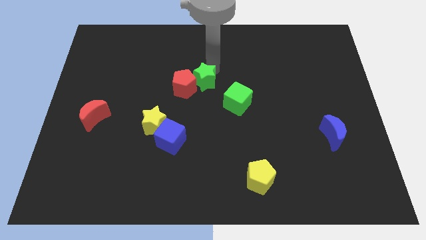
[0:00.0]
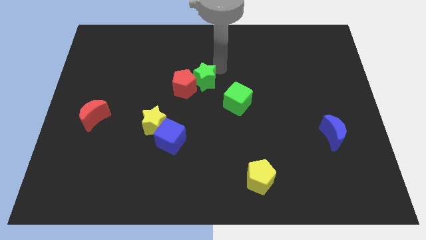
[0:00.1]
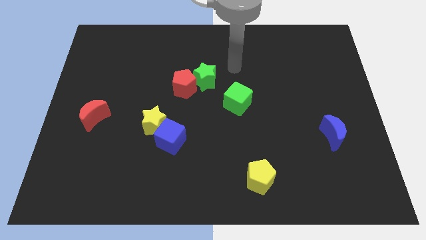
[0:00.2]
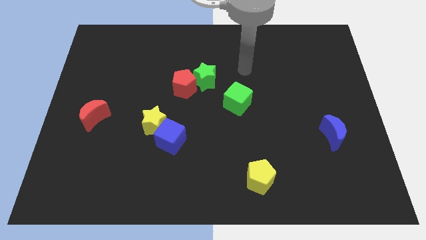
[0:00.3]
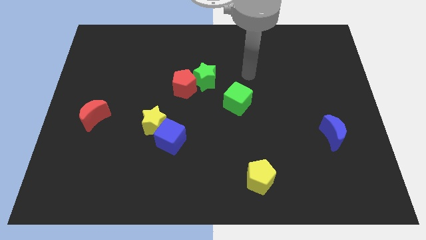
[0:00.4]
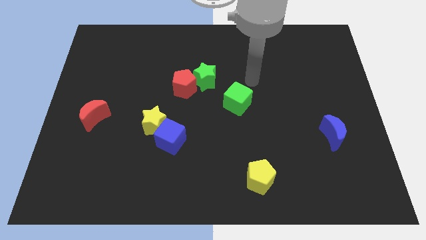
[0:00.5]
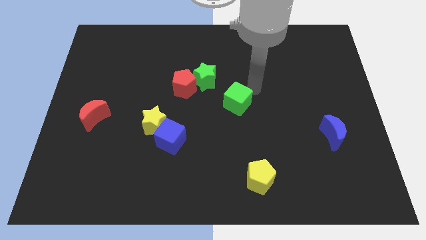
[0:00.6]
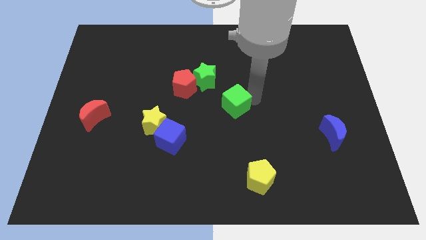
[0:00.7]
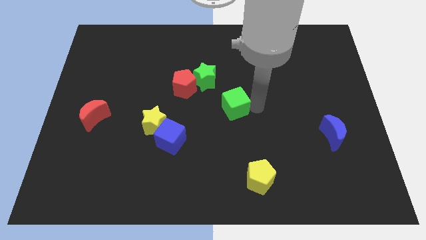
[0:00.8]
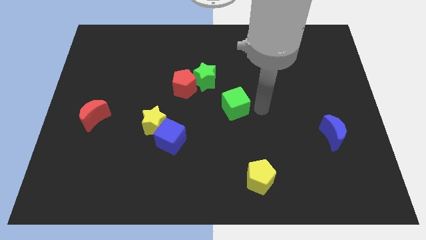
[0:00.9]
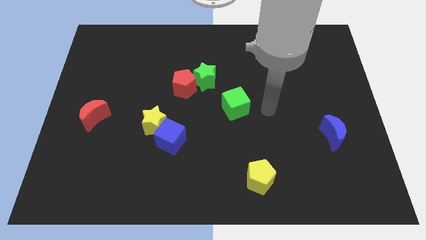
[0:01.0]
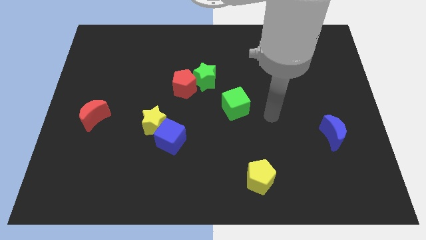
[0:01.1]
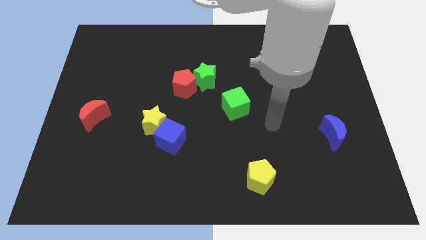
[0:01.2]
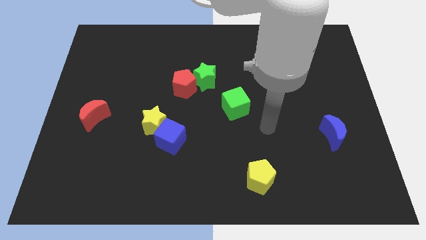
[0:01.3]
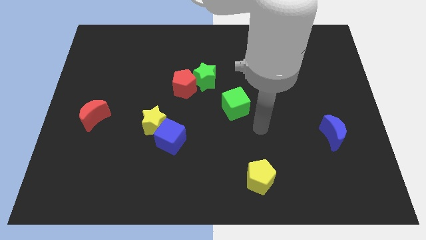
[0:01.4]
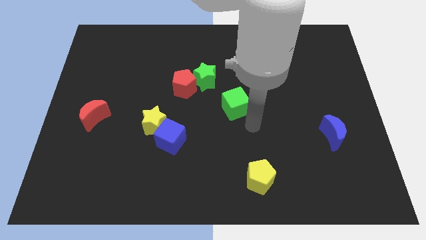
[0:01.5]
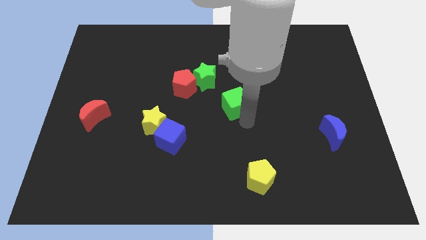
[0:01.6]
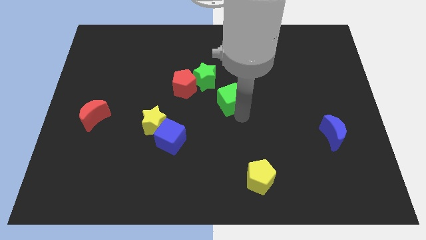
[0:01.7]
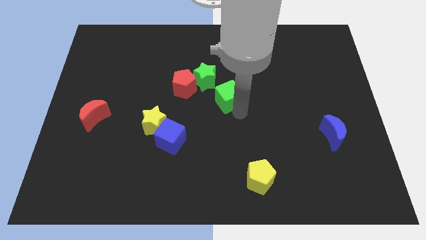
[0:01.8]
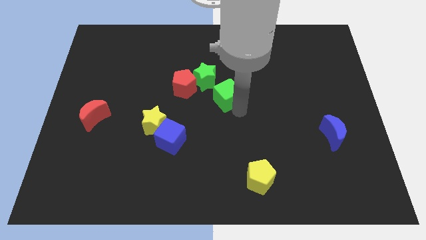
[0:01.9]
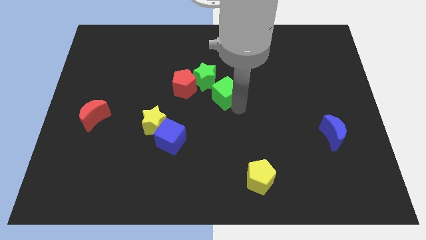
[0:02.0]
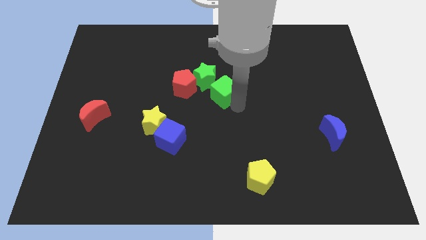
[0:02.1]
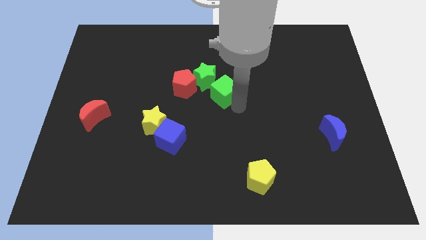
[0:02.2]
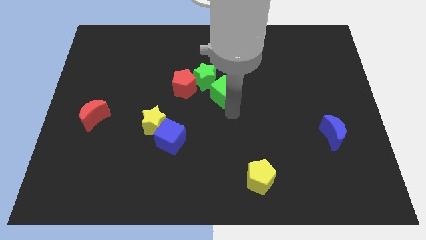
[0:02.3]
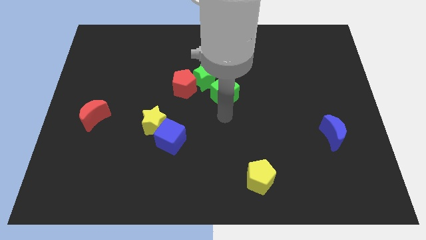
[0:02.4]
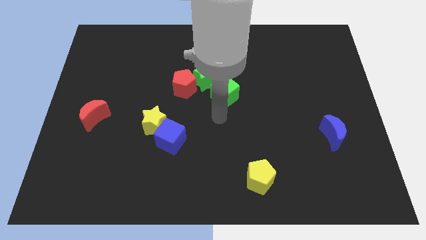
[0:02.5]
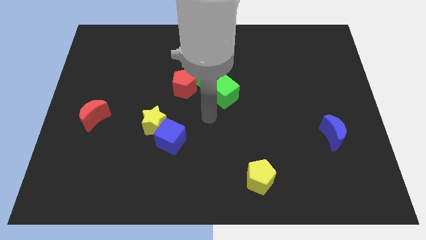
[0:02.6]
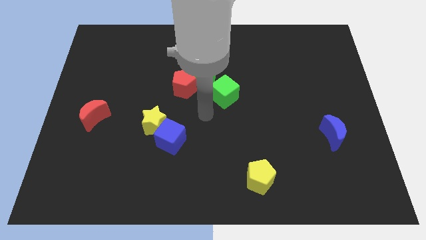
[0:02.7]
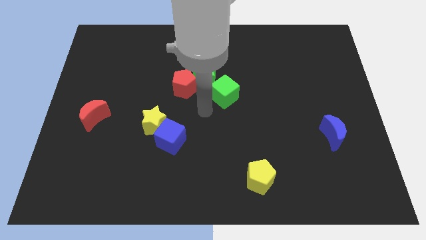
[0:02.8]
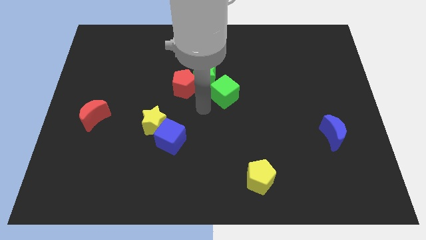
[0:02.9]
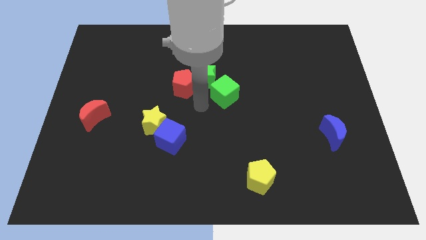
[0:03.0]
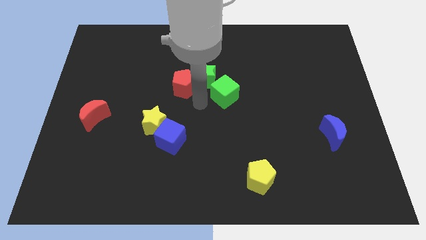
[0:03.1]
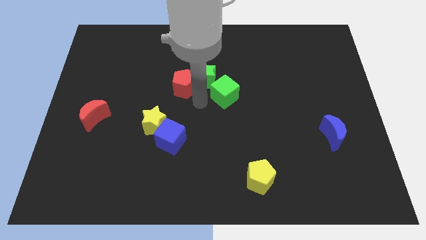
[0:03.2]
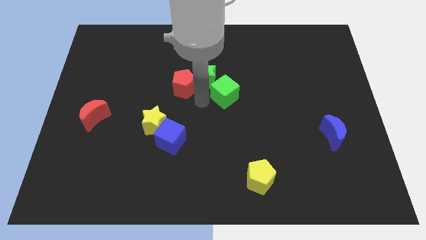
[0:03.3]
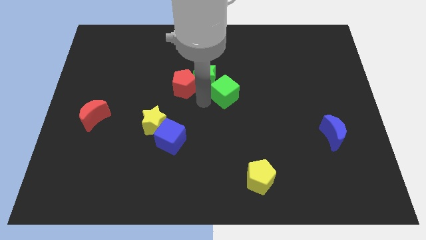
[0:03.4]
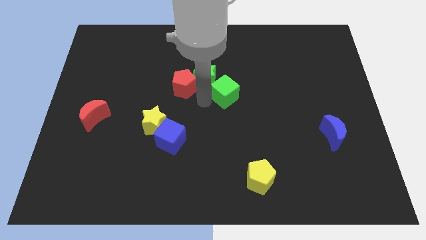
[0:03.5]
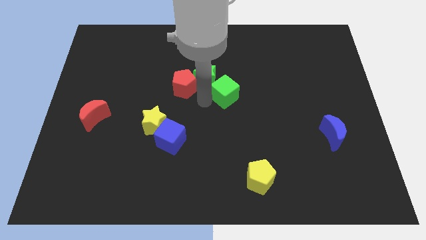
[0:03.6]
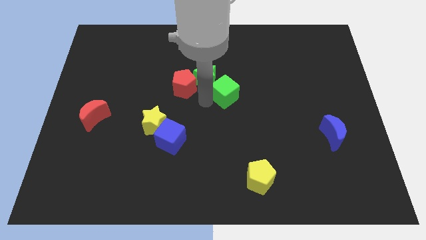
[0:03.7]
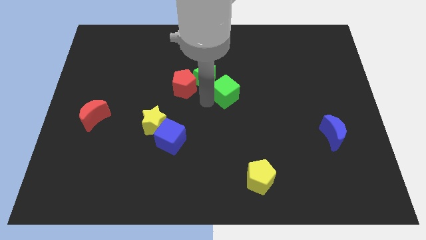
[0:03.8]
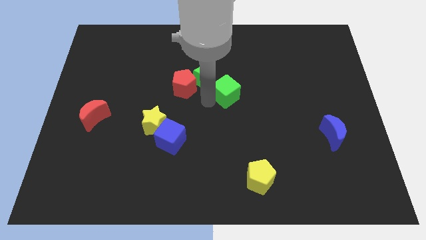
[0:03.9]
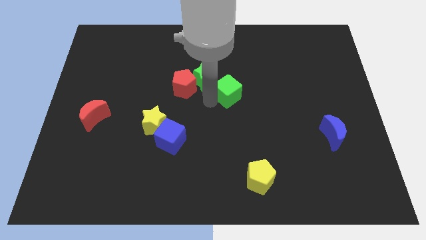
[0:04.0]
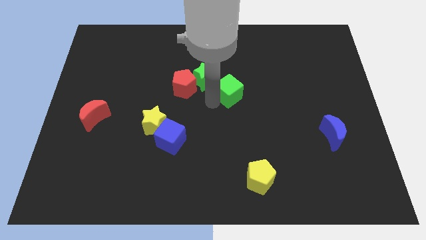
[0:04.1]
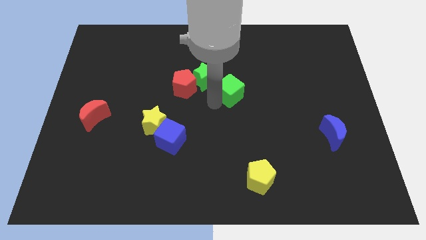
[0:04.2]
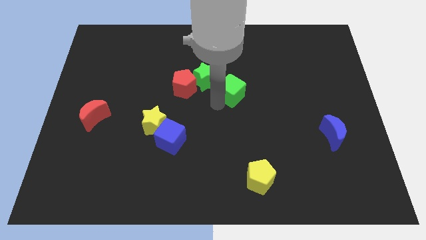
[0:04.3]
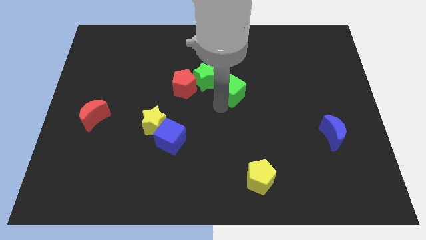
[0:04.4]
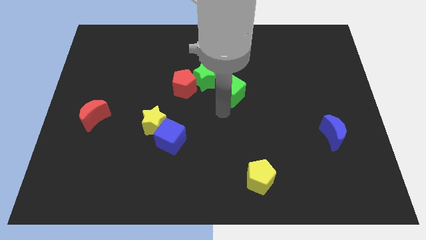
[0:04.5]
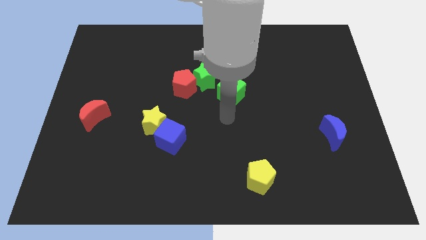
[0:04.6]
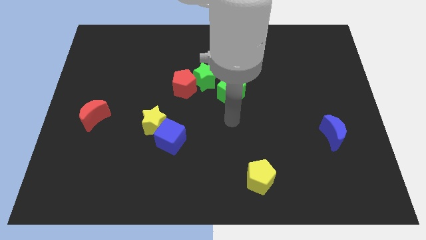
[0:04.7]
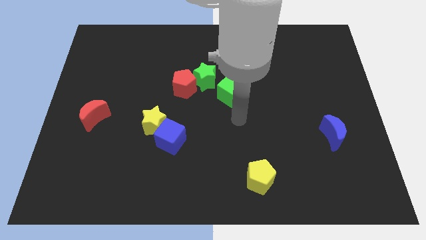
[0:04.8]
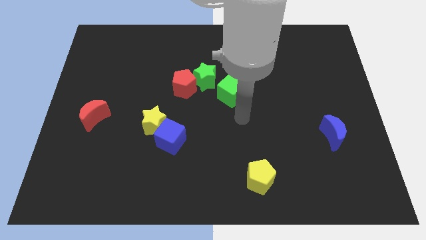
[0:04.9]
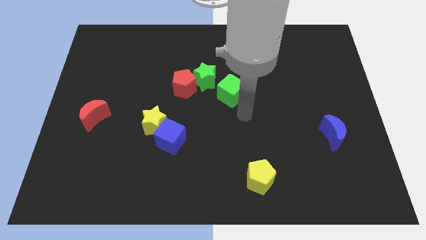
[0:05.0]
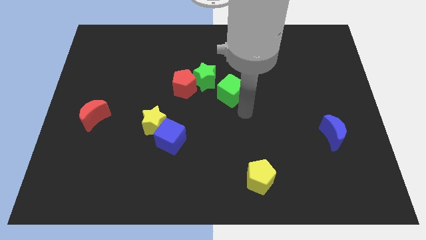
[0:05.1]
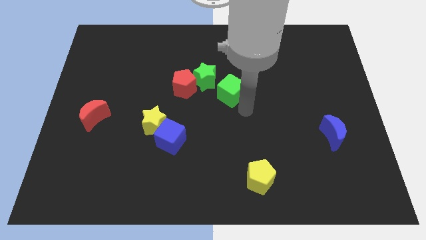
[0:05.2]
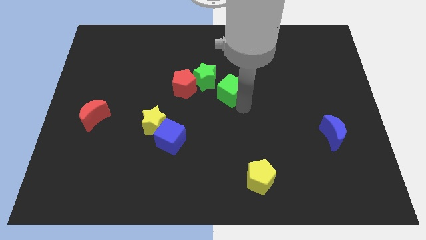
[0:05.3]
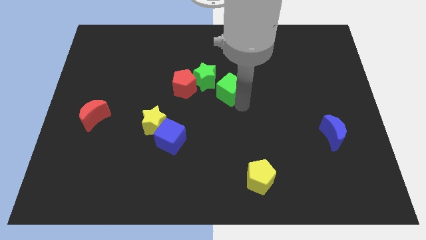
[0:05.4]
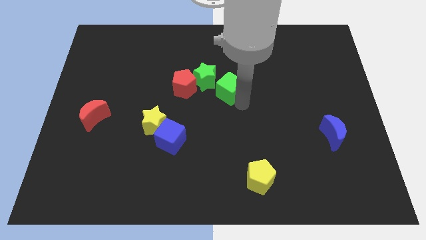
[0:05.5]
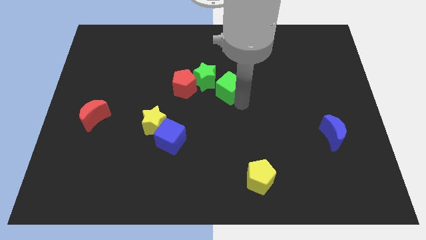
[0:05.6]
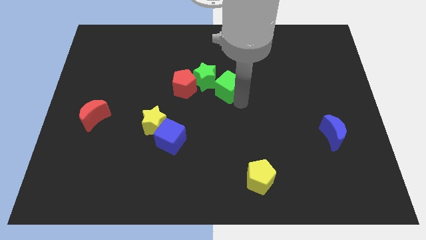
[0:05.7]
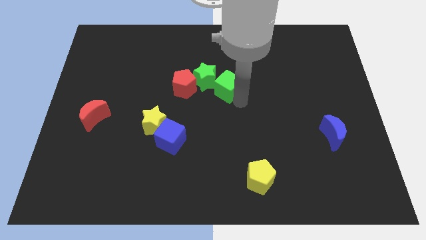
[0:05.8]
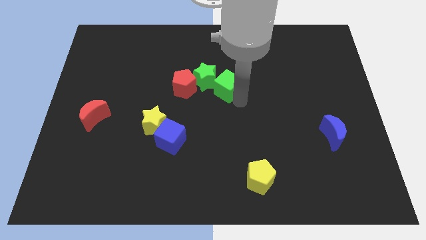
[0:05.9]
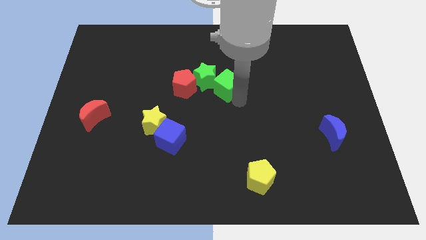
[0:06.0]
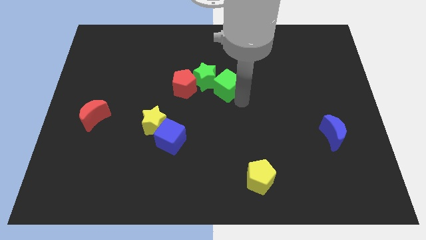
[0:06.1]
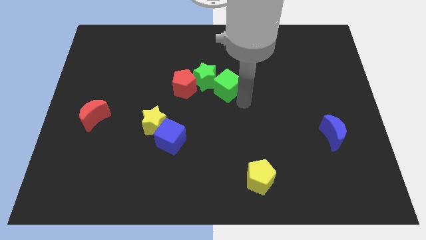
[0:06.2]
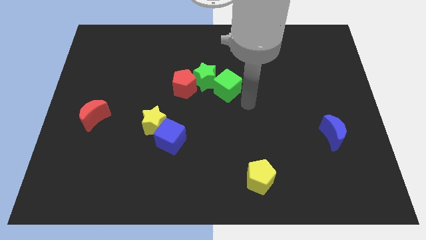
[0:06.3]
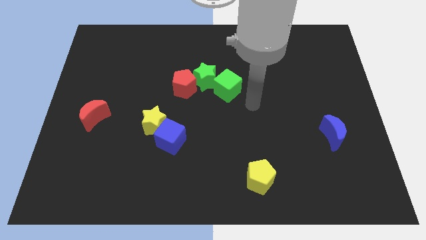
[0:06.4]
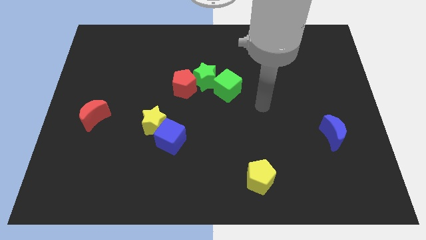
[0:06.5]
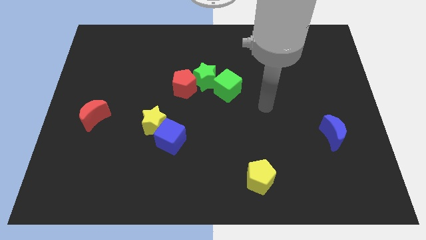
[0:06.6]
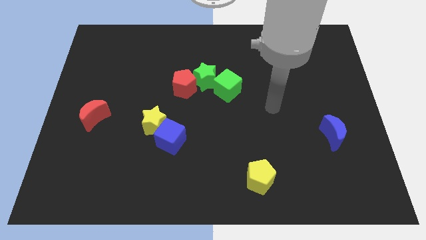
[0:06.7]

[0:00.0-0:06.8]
move the green cube close to the green star

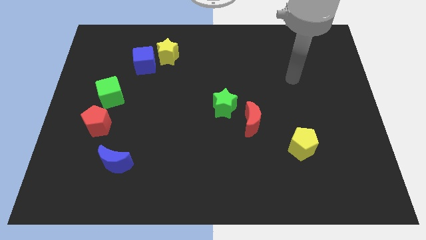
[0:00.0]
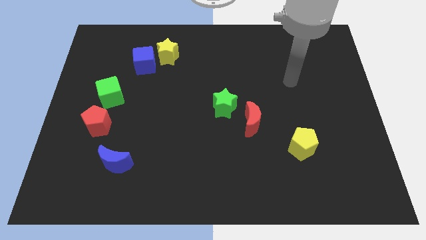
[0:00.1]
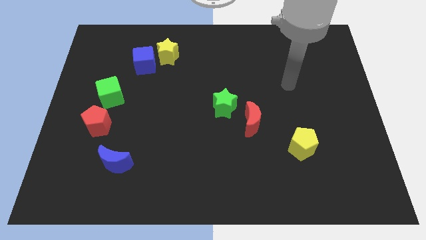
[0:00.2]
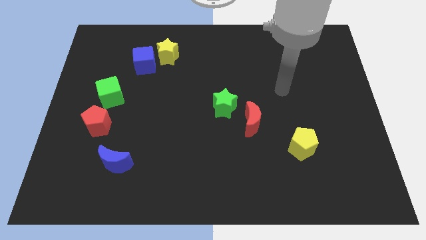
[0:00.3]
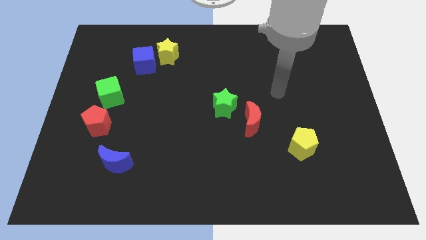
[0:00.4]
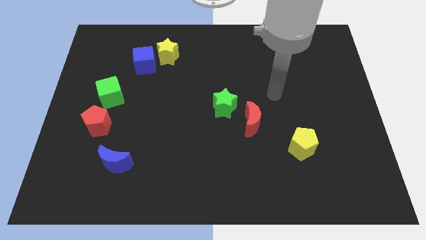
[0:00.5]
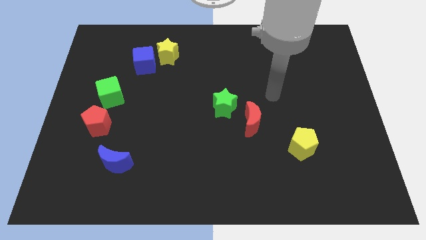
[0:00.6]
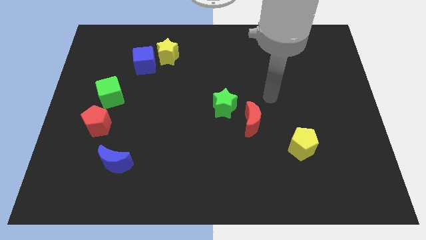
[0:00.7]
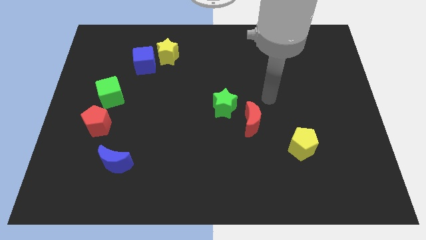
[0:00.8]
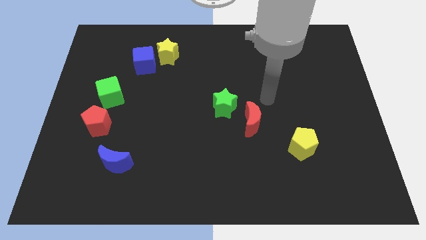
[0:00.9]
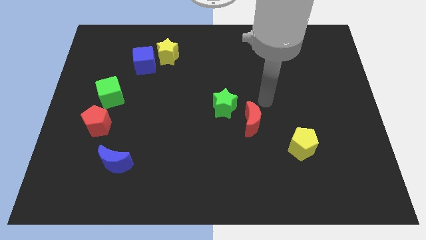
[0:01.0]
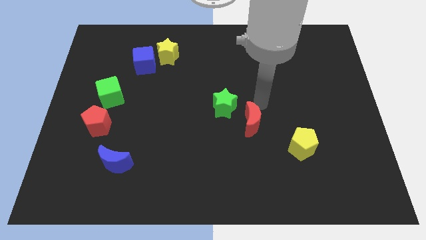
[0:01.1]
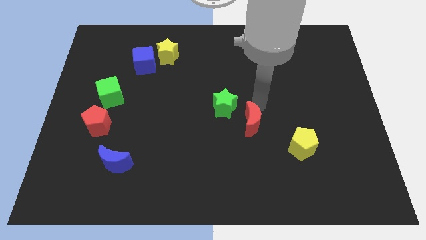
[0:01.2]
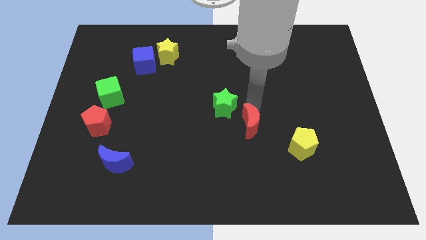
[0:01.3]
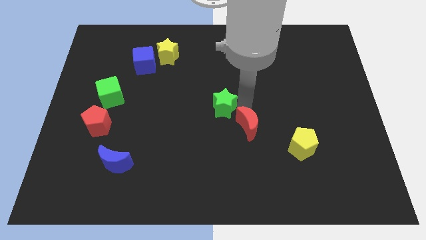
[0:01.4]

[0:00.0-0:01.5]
tap the red moon on the top side

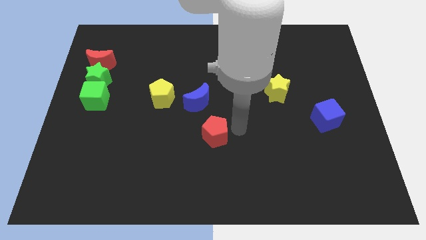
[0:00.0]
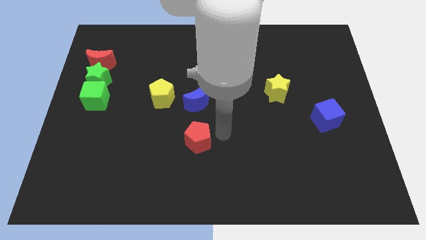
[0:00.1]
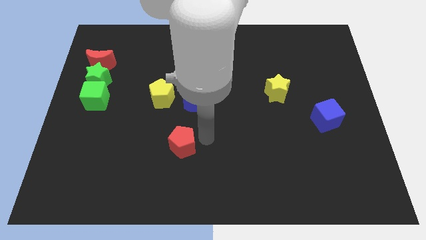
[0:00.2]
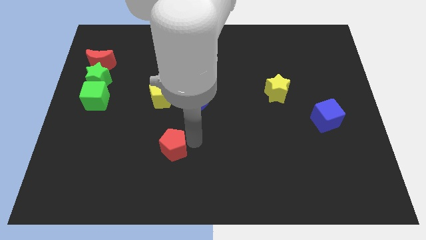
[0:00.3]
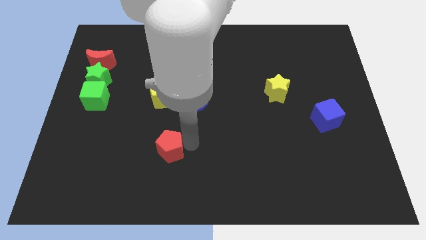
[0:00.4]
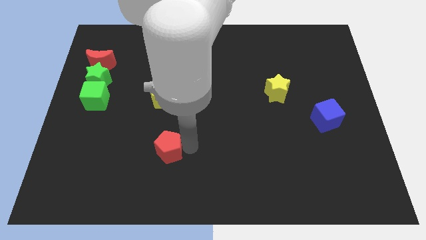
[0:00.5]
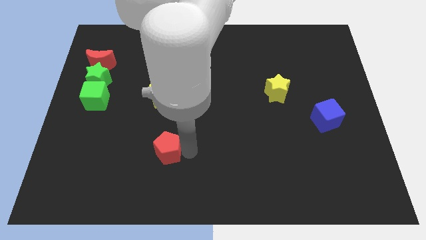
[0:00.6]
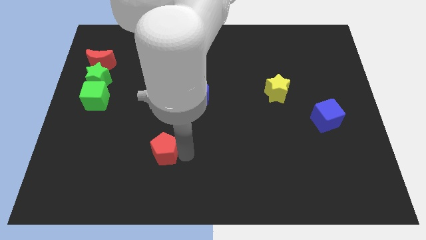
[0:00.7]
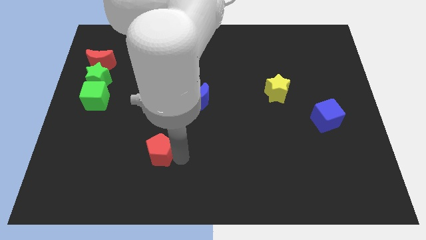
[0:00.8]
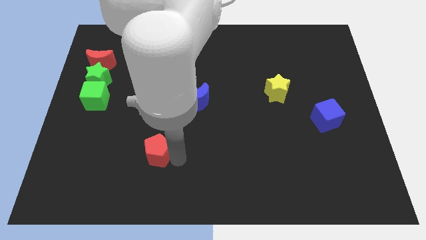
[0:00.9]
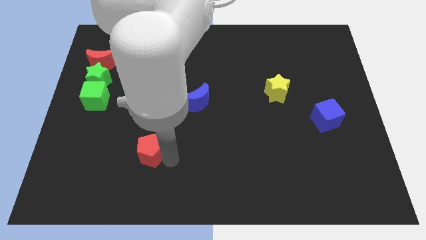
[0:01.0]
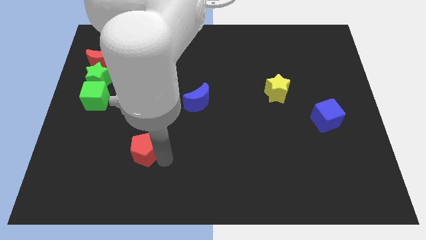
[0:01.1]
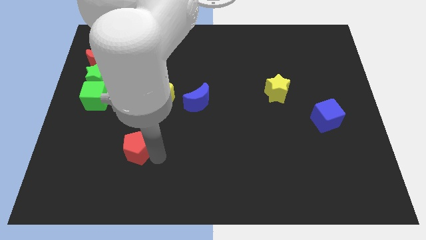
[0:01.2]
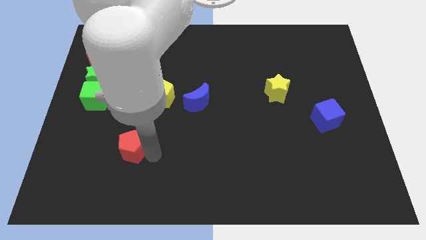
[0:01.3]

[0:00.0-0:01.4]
move the red pentagon to the left of the board
